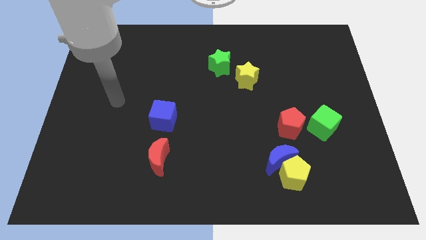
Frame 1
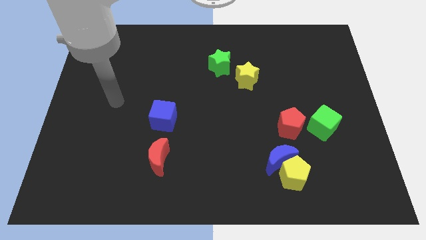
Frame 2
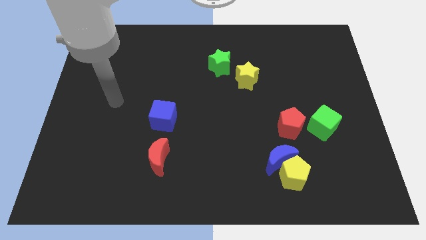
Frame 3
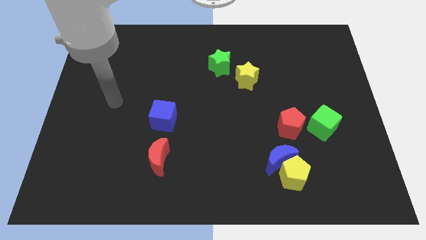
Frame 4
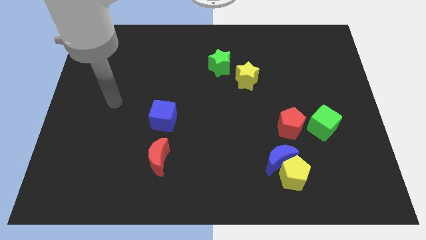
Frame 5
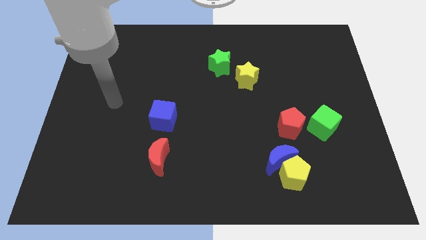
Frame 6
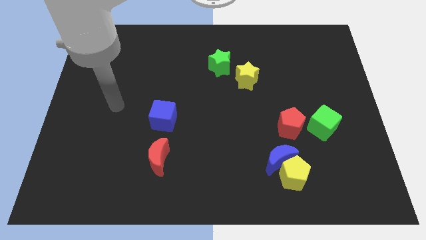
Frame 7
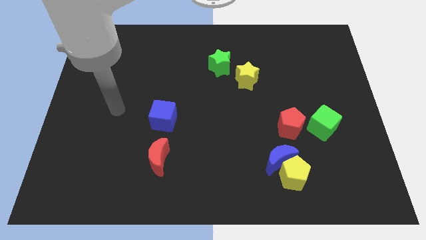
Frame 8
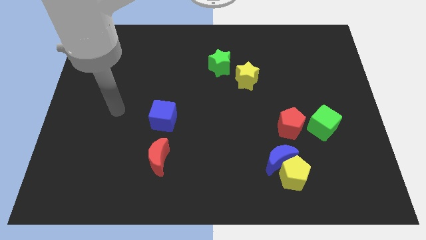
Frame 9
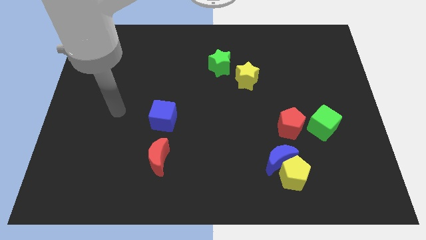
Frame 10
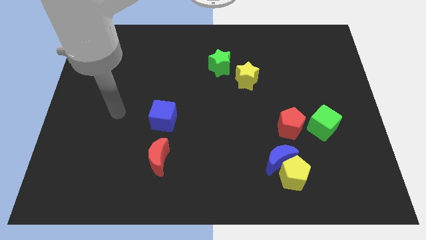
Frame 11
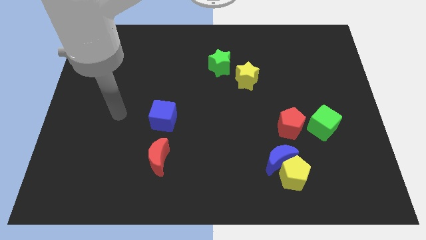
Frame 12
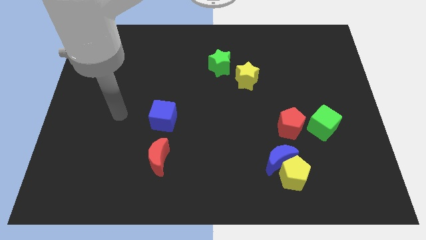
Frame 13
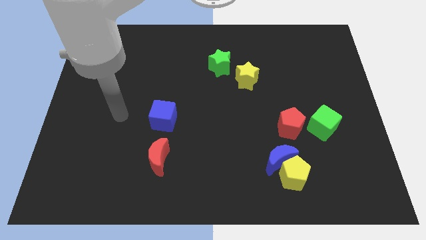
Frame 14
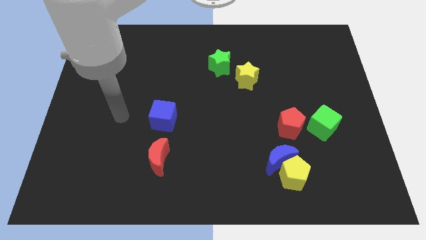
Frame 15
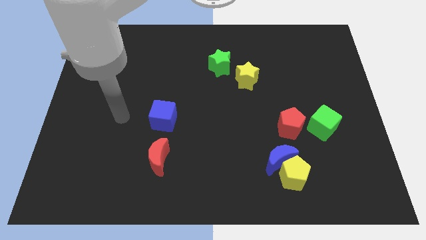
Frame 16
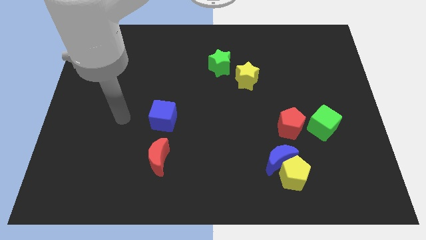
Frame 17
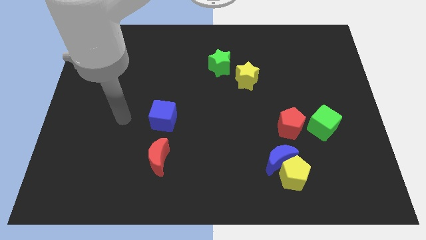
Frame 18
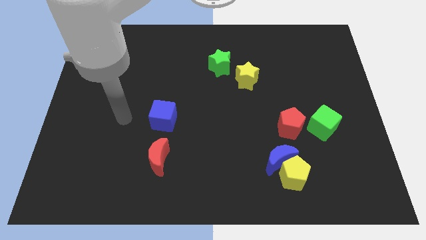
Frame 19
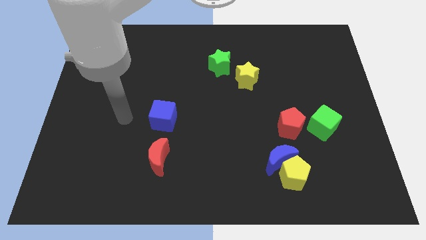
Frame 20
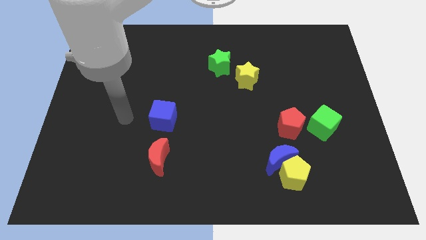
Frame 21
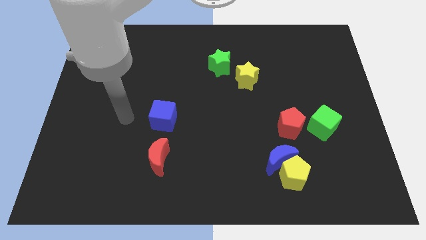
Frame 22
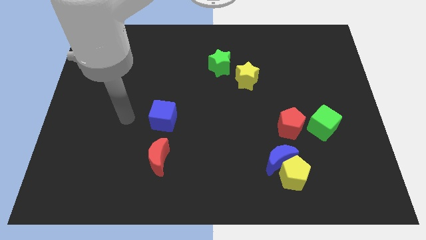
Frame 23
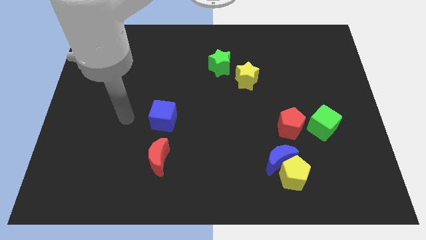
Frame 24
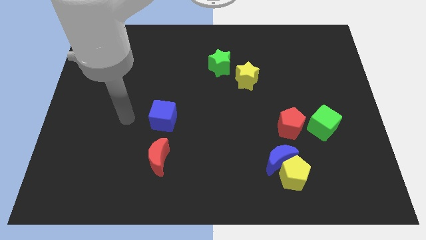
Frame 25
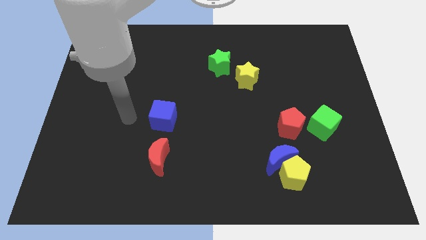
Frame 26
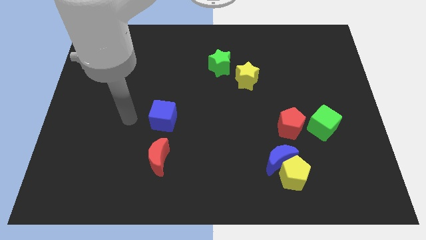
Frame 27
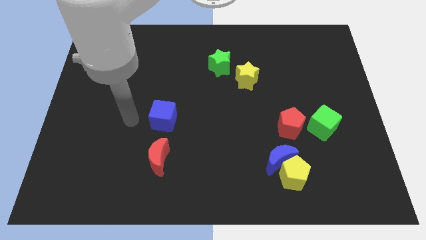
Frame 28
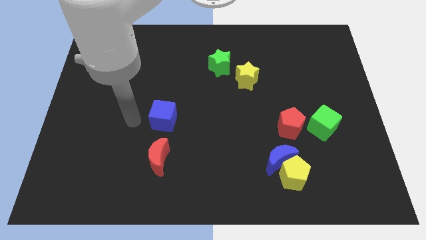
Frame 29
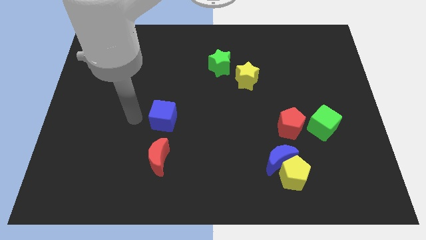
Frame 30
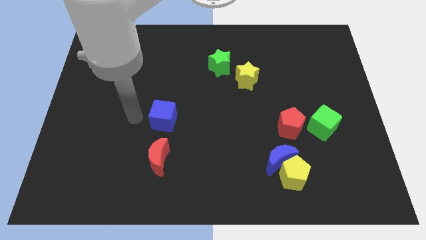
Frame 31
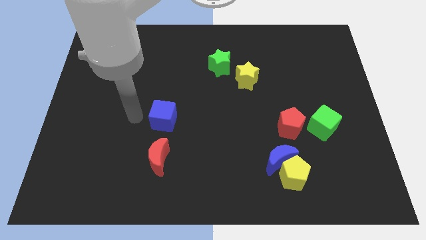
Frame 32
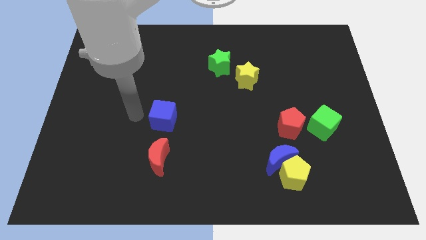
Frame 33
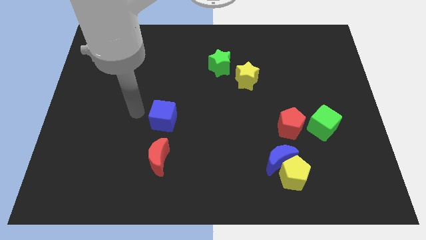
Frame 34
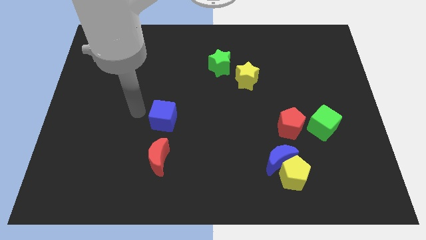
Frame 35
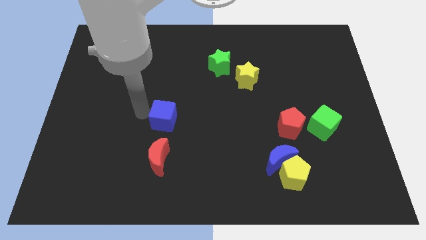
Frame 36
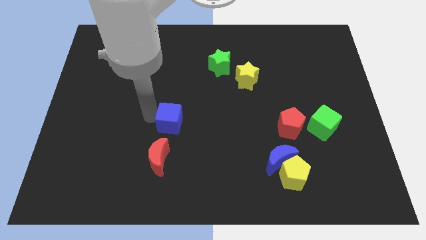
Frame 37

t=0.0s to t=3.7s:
move your arm close to the blue cube

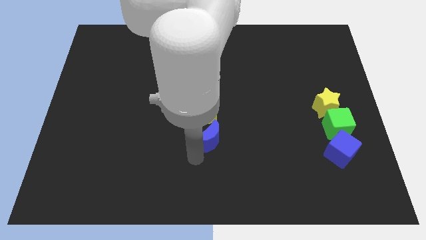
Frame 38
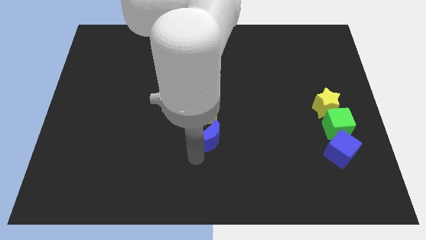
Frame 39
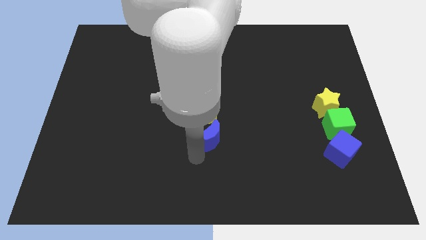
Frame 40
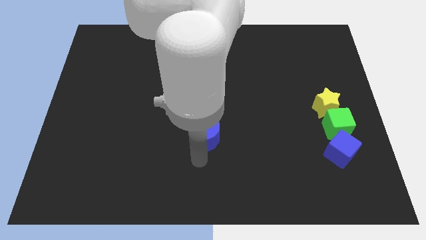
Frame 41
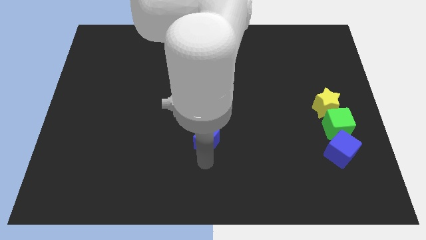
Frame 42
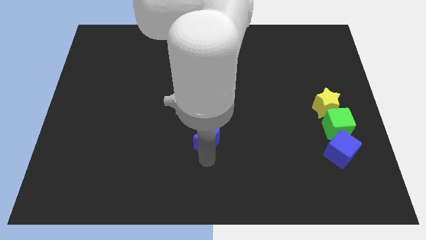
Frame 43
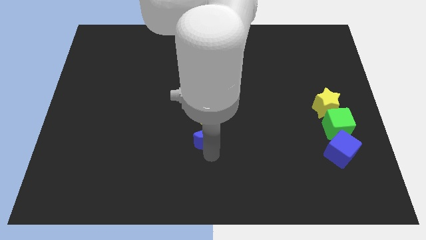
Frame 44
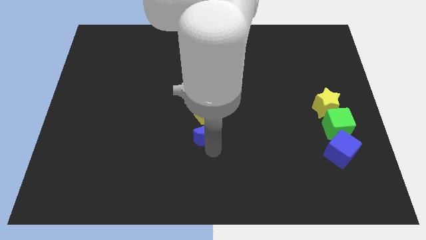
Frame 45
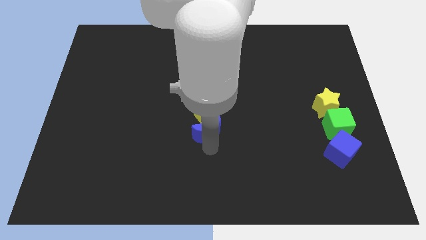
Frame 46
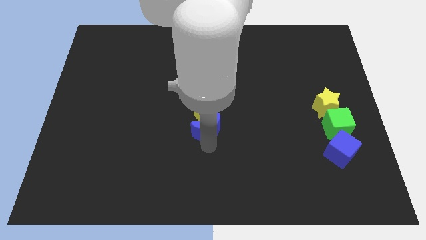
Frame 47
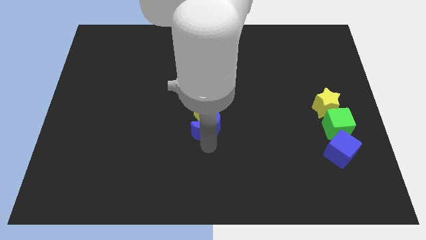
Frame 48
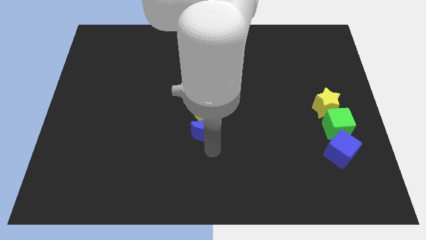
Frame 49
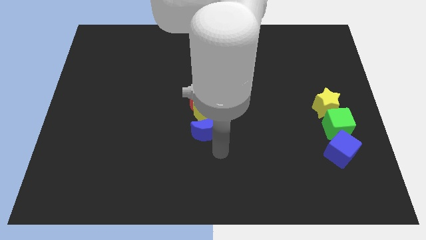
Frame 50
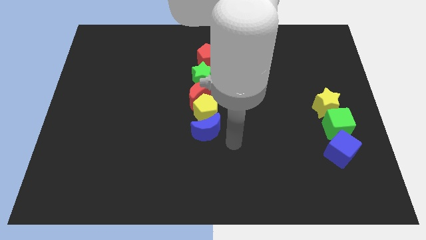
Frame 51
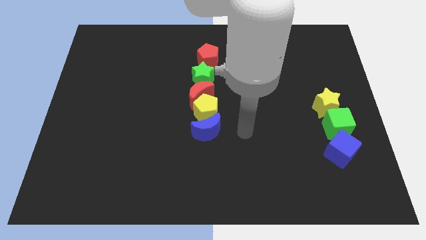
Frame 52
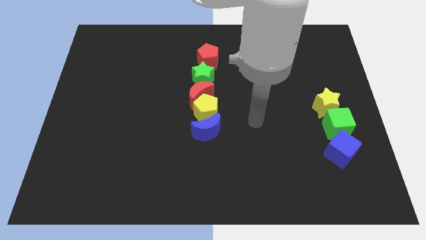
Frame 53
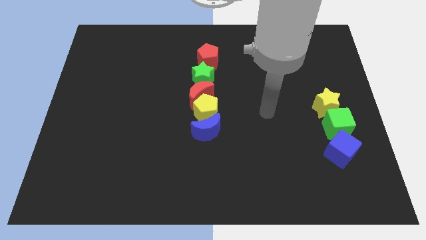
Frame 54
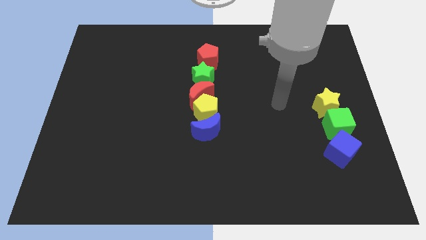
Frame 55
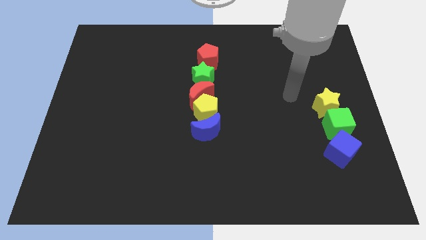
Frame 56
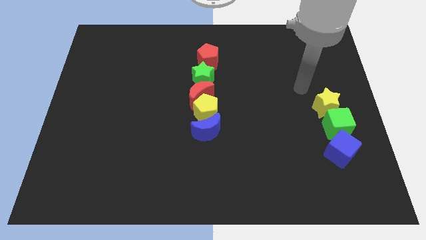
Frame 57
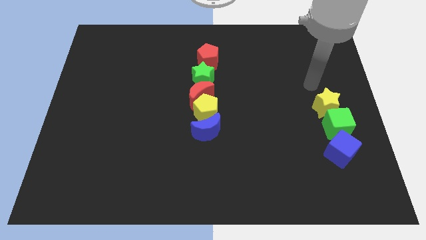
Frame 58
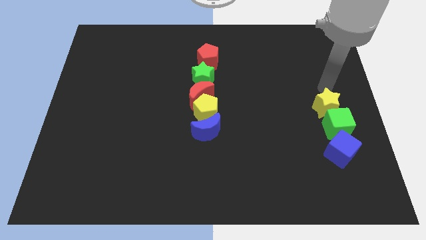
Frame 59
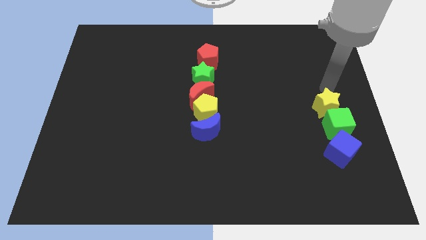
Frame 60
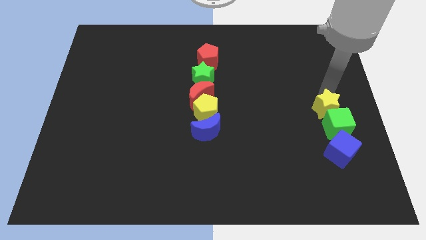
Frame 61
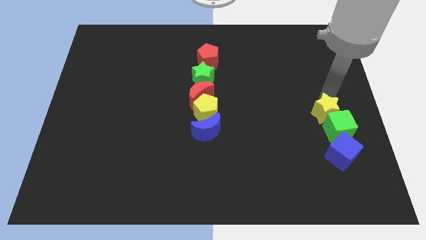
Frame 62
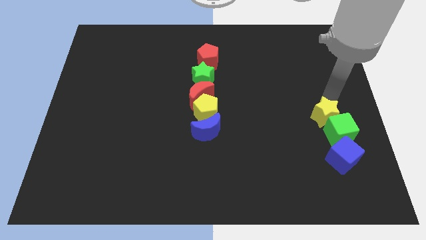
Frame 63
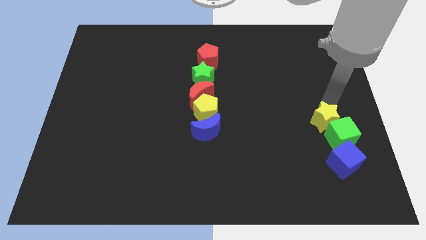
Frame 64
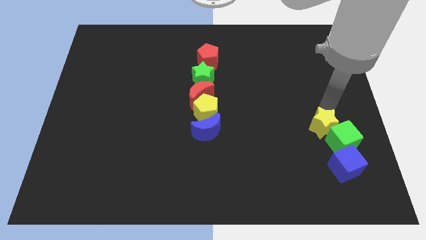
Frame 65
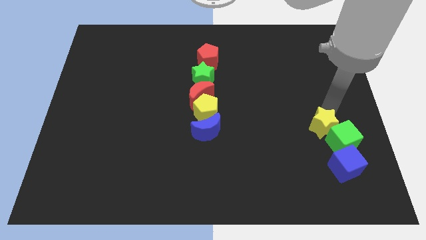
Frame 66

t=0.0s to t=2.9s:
put the yellow star into the green cube

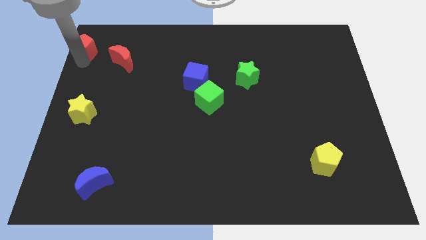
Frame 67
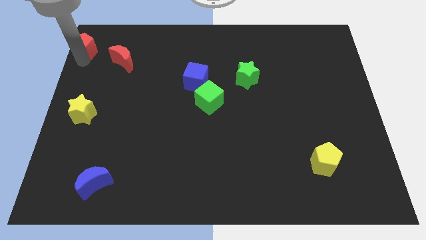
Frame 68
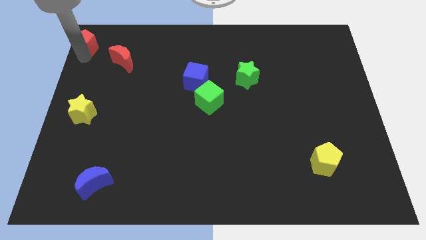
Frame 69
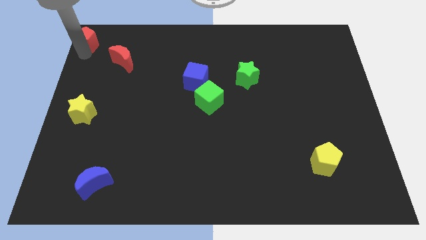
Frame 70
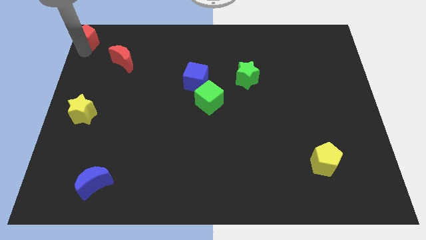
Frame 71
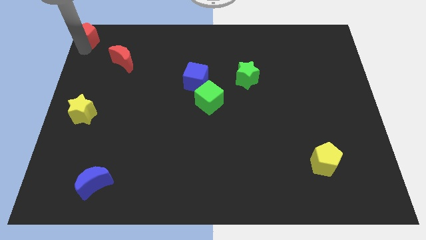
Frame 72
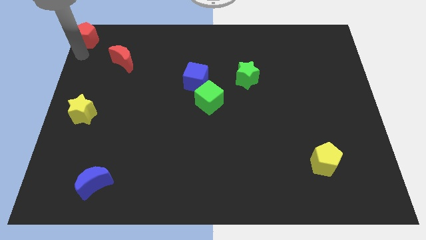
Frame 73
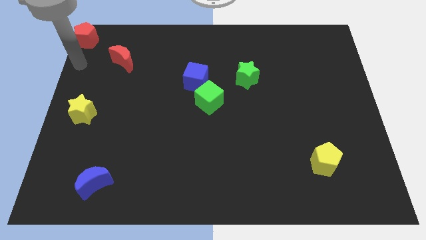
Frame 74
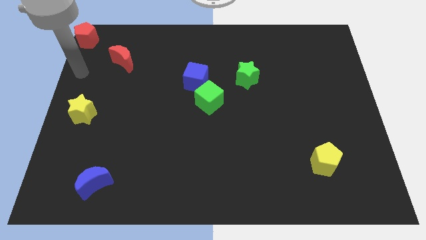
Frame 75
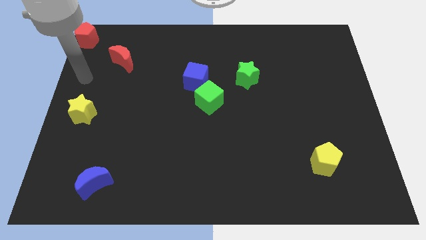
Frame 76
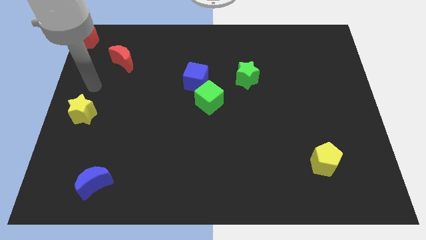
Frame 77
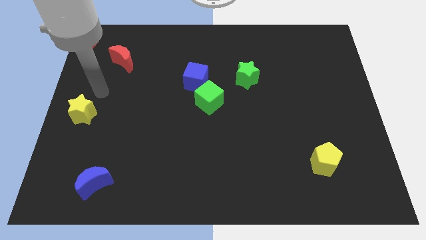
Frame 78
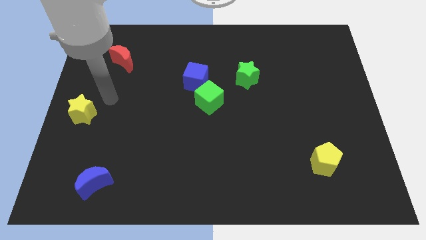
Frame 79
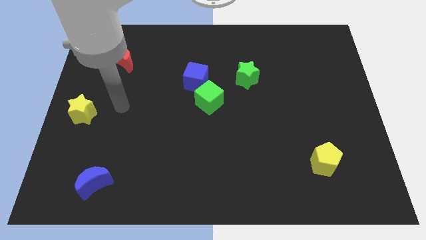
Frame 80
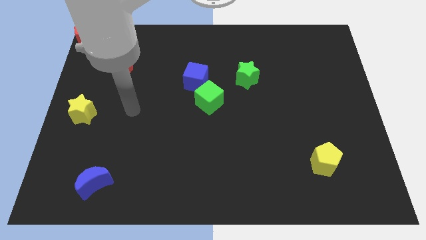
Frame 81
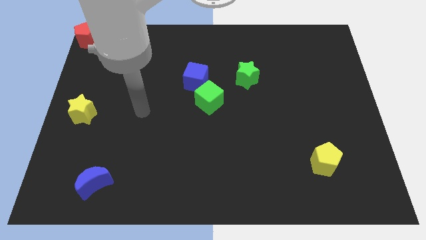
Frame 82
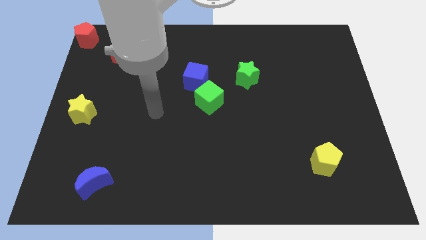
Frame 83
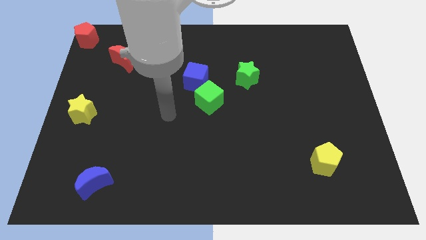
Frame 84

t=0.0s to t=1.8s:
push the red pentagon towards the top left corner of the board

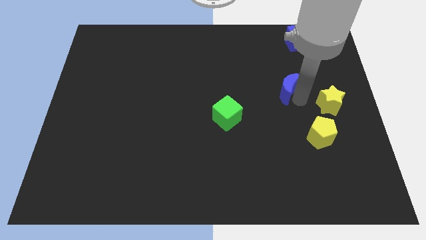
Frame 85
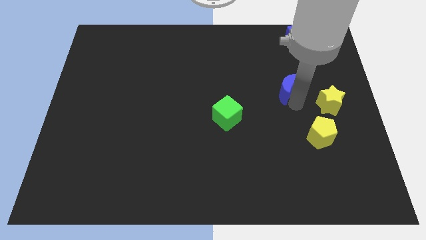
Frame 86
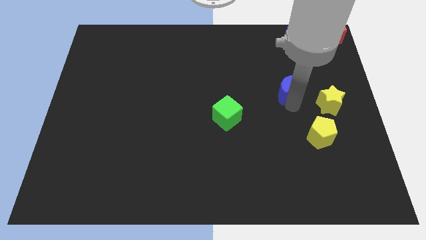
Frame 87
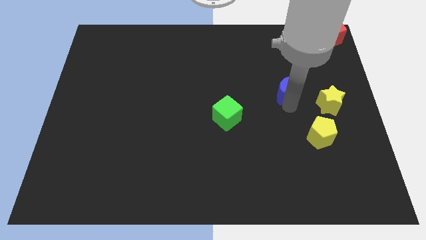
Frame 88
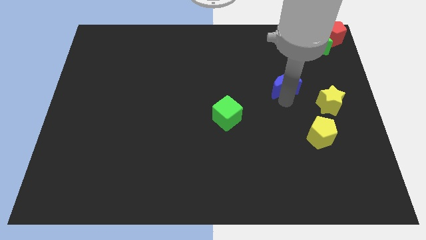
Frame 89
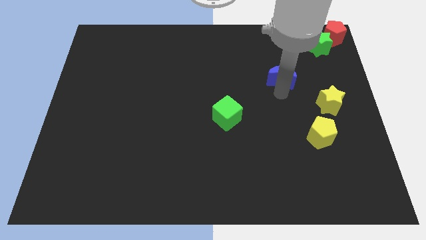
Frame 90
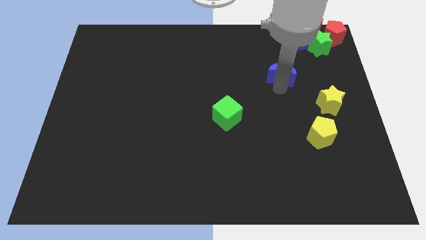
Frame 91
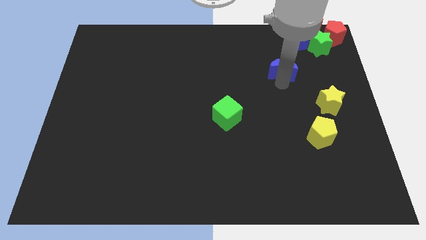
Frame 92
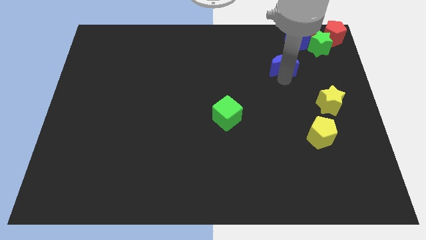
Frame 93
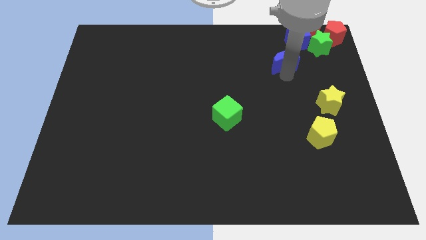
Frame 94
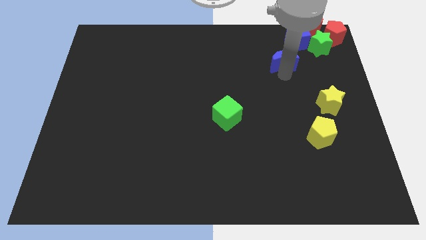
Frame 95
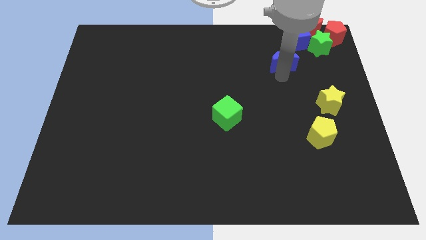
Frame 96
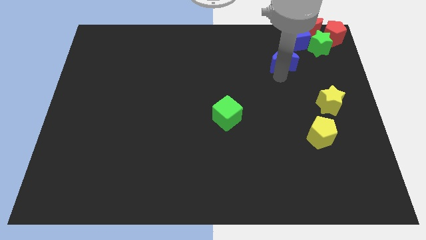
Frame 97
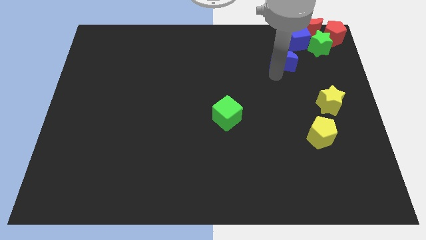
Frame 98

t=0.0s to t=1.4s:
move the blue crescent towards the blue cube
